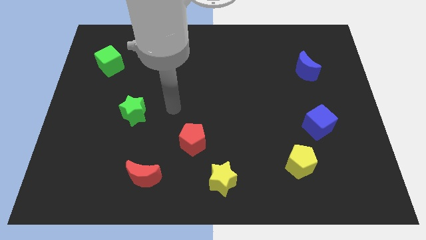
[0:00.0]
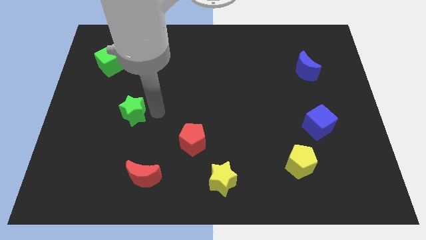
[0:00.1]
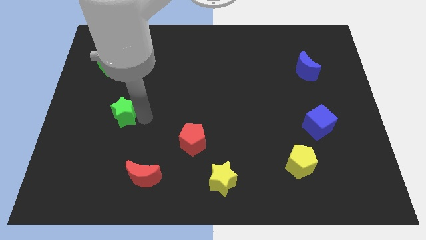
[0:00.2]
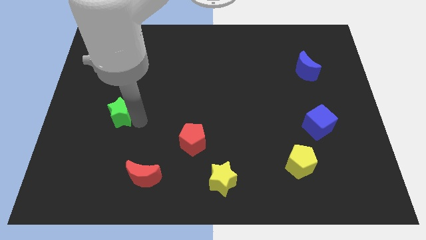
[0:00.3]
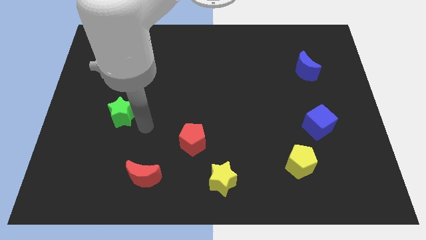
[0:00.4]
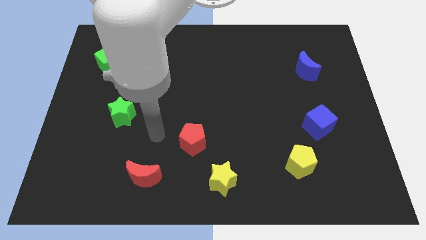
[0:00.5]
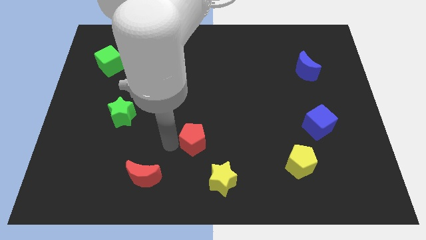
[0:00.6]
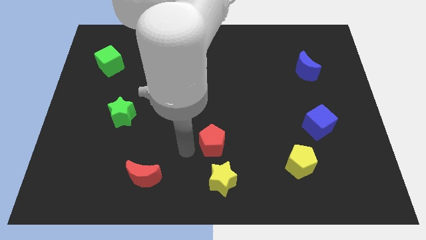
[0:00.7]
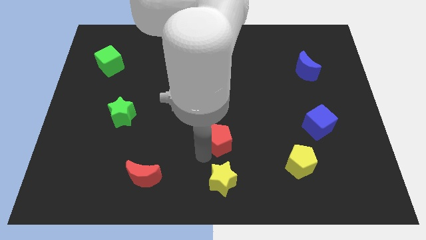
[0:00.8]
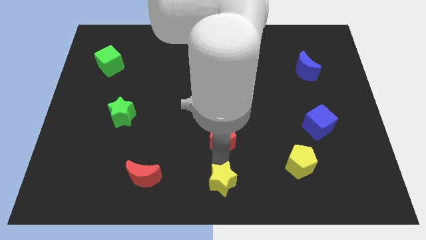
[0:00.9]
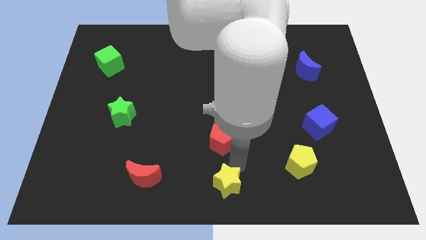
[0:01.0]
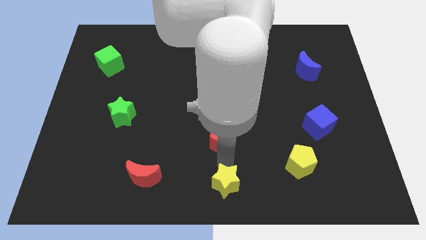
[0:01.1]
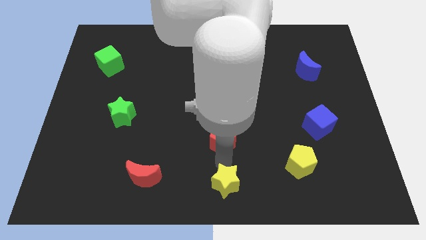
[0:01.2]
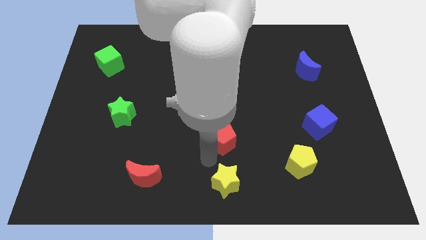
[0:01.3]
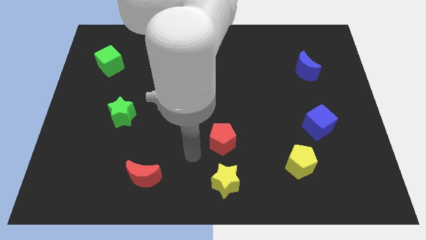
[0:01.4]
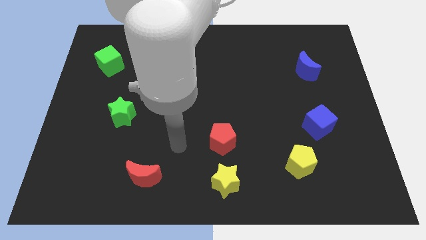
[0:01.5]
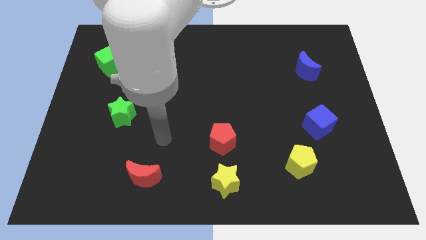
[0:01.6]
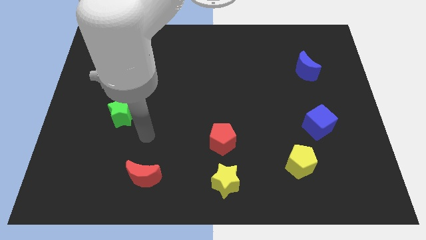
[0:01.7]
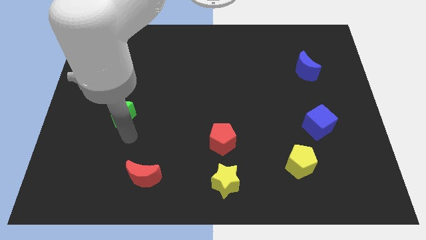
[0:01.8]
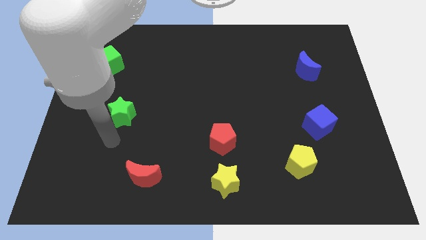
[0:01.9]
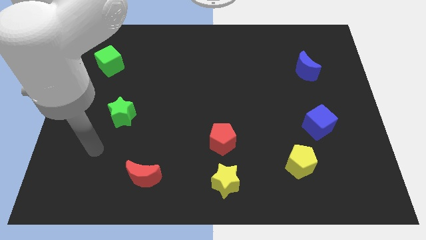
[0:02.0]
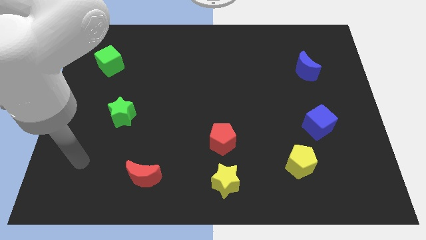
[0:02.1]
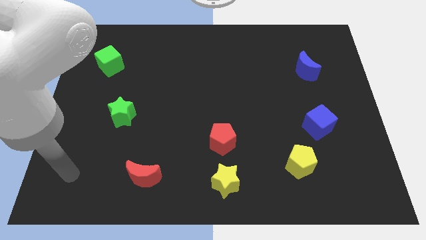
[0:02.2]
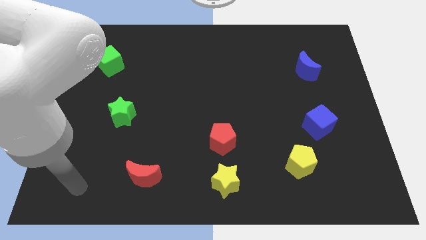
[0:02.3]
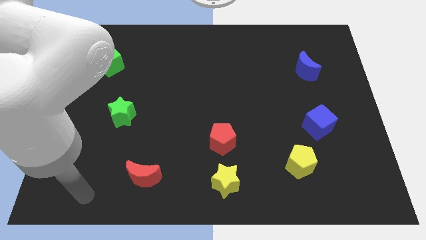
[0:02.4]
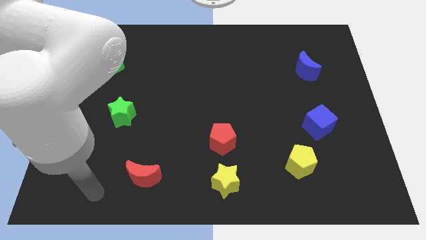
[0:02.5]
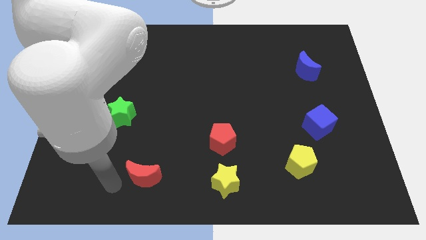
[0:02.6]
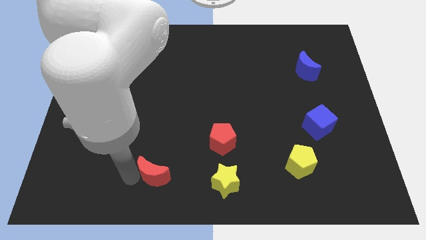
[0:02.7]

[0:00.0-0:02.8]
place your arm near the red moon

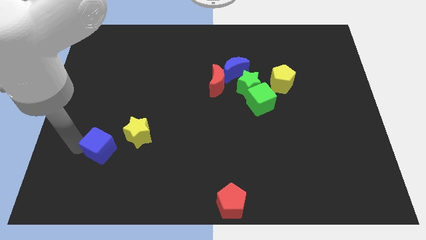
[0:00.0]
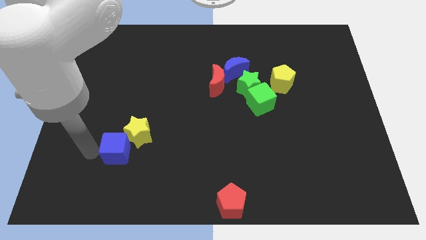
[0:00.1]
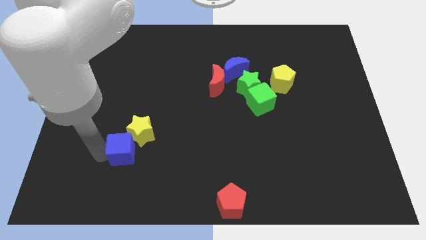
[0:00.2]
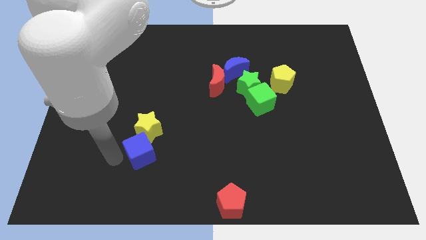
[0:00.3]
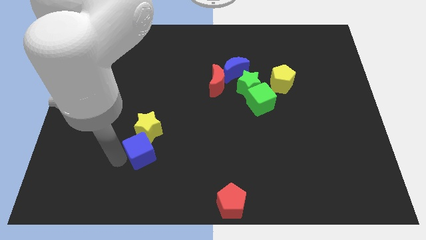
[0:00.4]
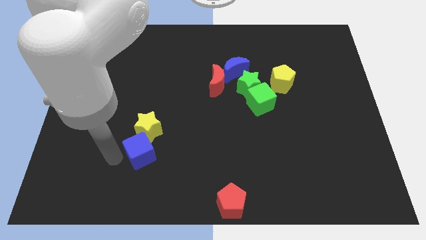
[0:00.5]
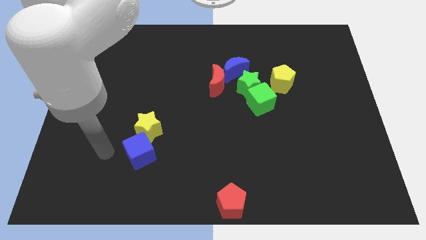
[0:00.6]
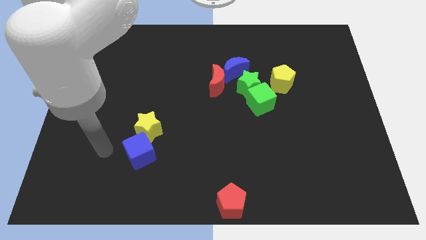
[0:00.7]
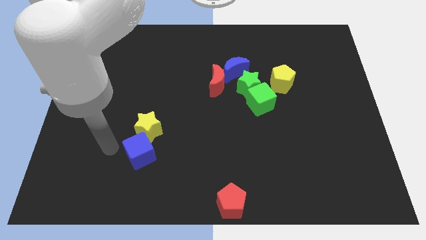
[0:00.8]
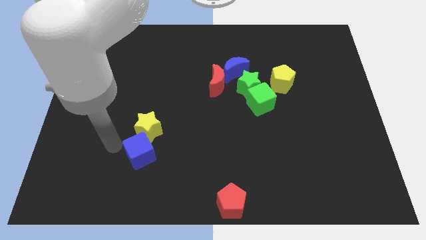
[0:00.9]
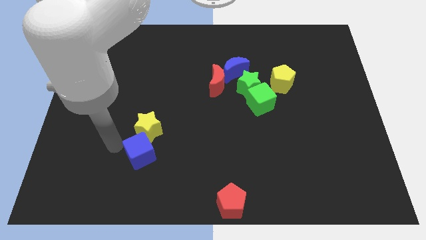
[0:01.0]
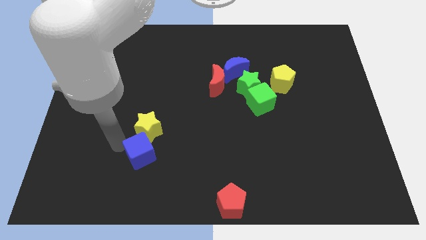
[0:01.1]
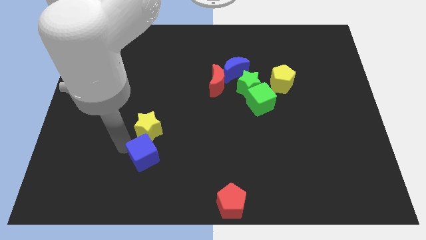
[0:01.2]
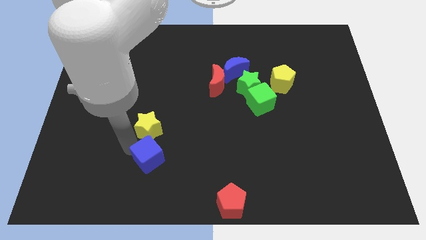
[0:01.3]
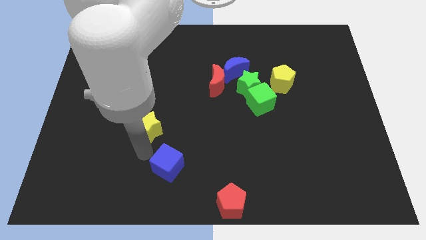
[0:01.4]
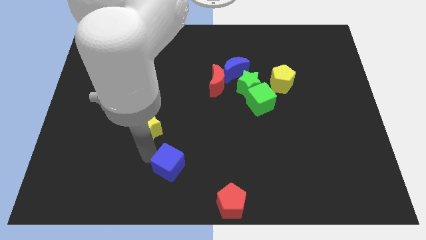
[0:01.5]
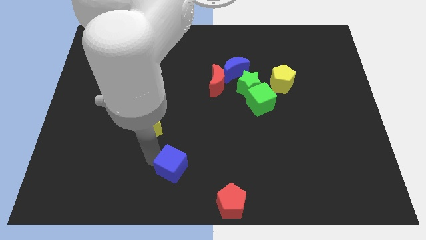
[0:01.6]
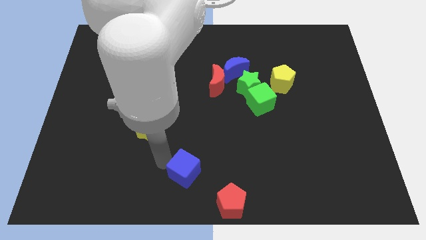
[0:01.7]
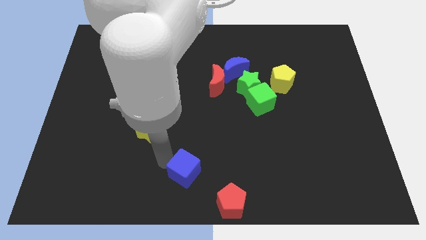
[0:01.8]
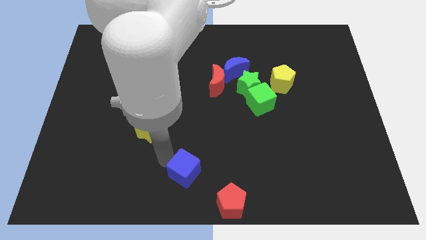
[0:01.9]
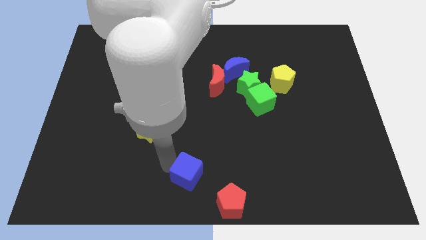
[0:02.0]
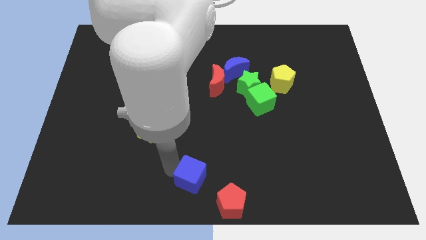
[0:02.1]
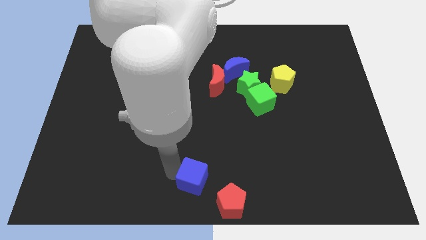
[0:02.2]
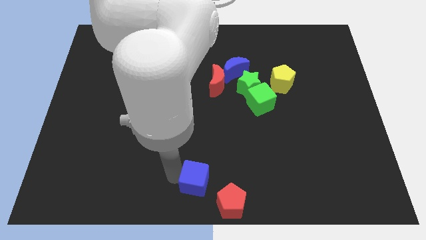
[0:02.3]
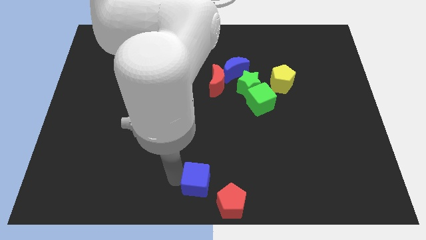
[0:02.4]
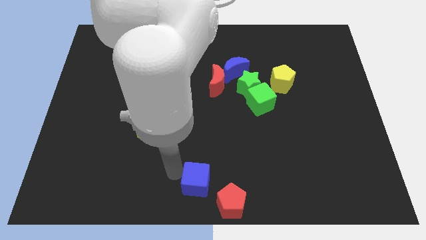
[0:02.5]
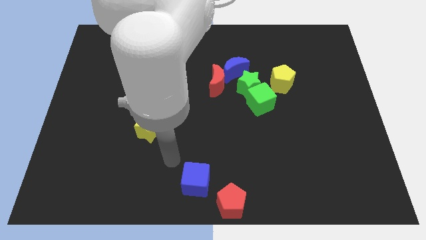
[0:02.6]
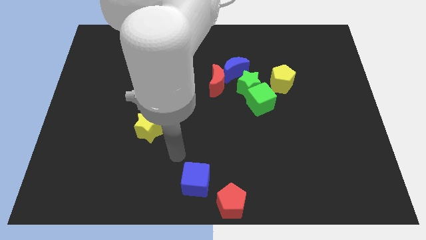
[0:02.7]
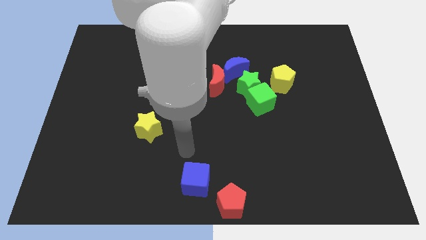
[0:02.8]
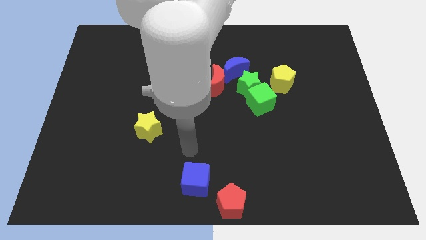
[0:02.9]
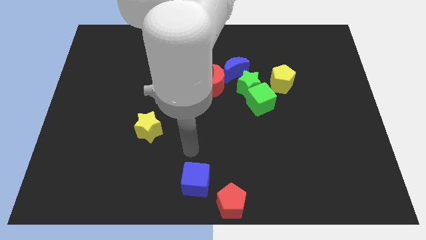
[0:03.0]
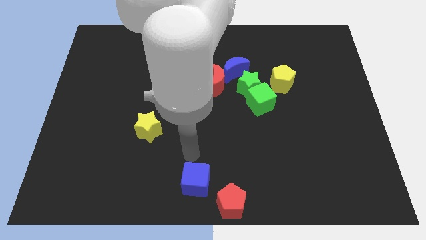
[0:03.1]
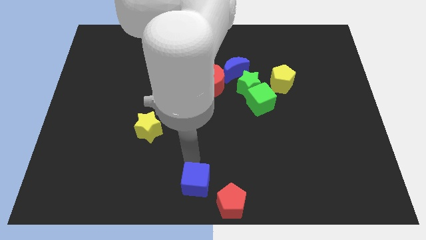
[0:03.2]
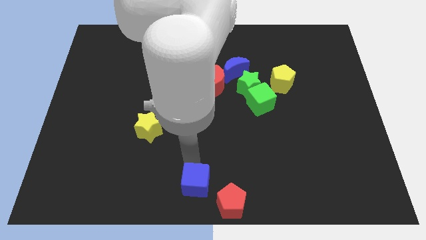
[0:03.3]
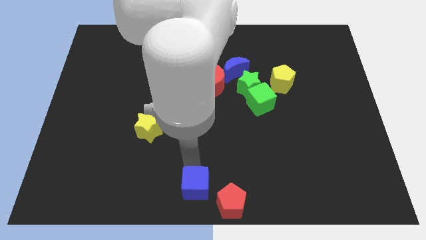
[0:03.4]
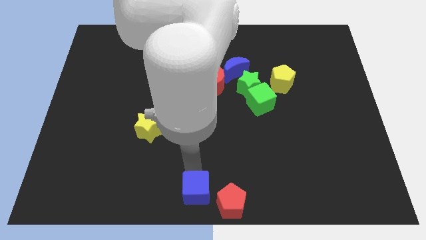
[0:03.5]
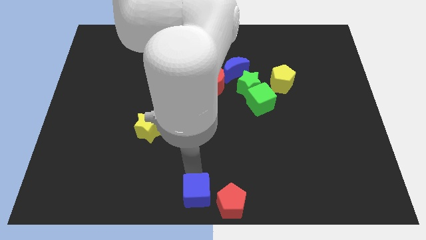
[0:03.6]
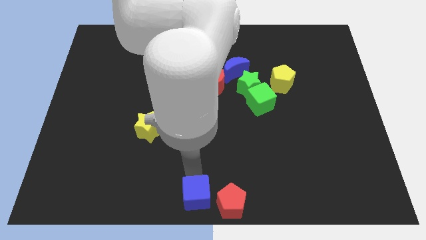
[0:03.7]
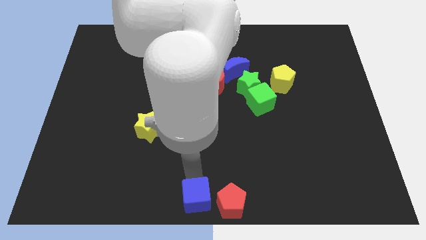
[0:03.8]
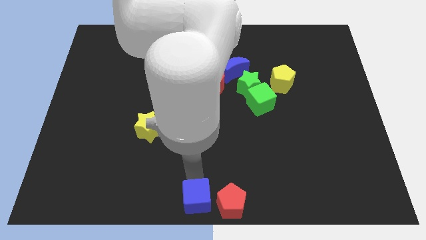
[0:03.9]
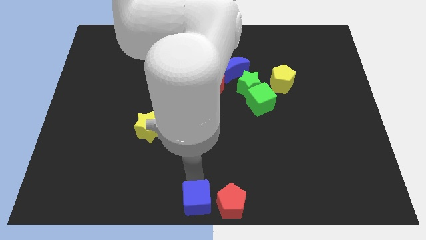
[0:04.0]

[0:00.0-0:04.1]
separate blue cube from yellow star

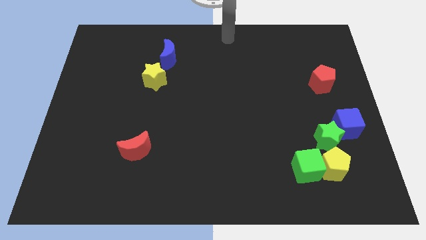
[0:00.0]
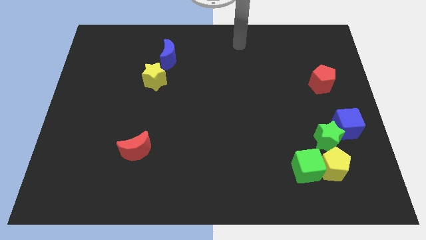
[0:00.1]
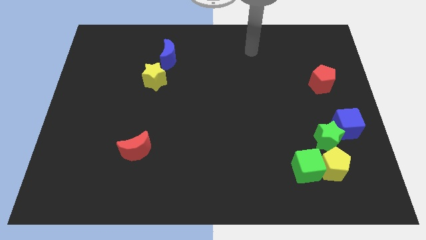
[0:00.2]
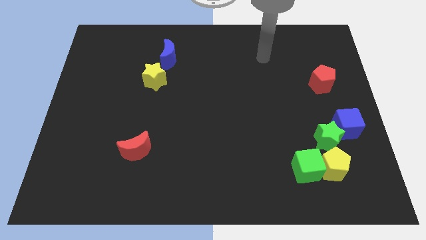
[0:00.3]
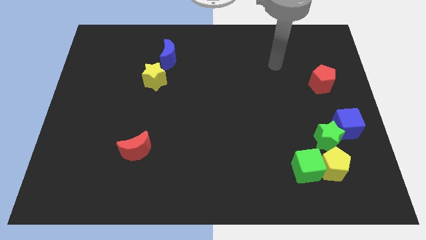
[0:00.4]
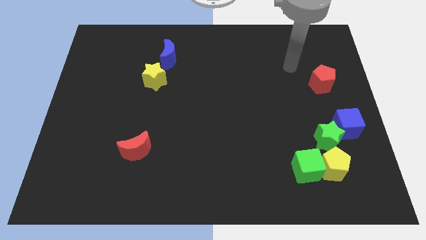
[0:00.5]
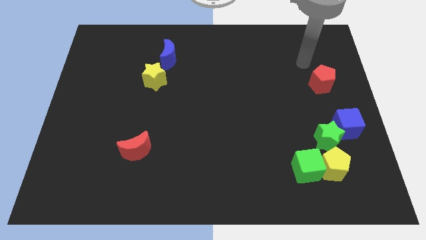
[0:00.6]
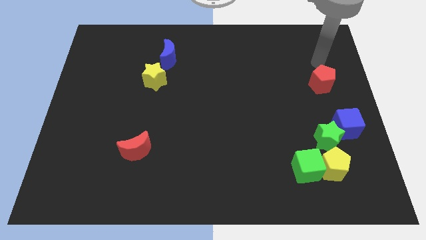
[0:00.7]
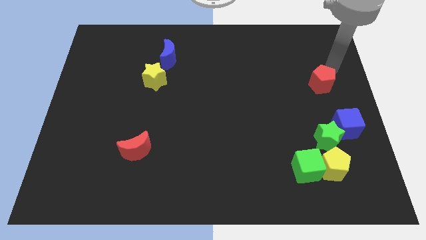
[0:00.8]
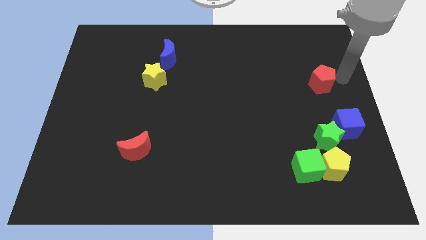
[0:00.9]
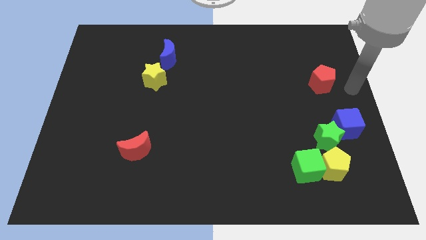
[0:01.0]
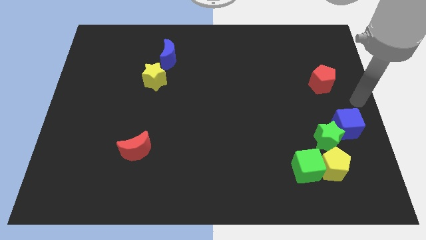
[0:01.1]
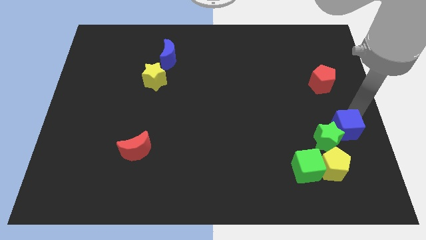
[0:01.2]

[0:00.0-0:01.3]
move your arm towards blue cube

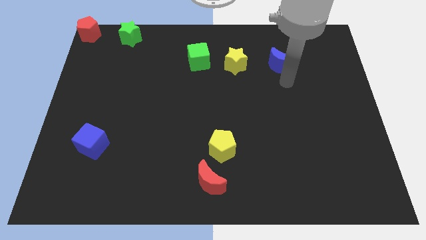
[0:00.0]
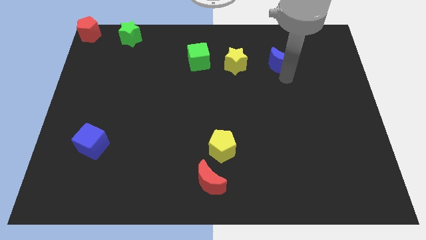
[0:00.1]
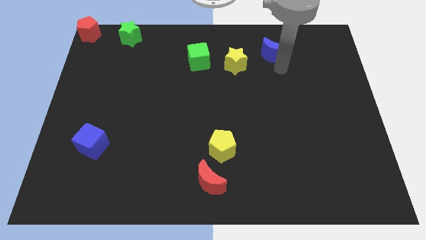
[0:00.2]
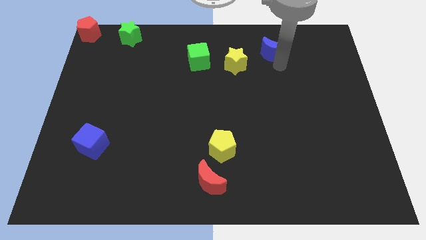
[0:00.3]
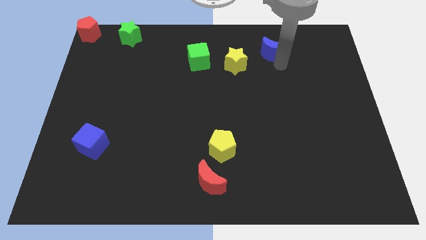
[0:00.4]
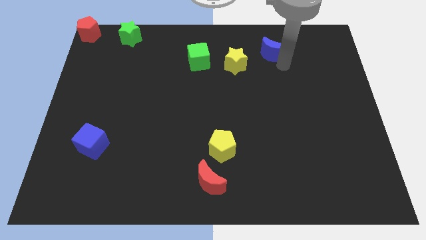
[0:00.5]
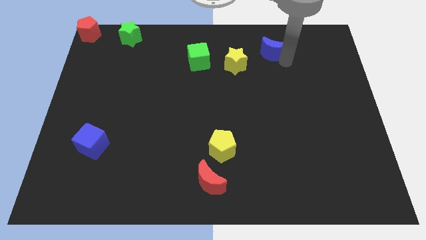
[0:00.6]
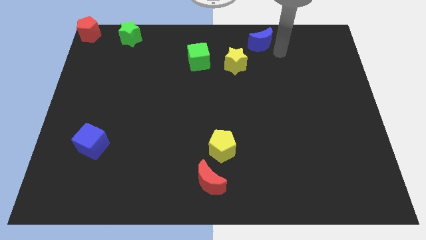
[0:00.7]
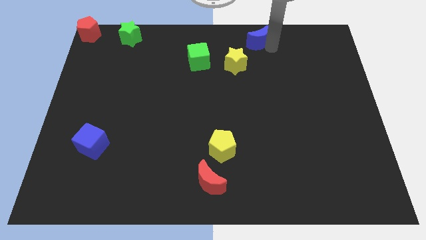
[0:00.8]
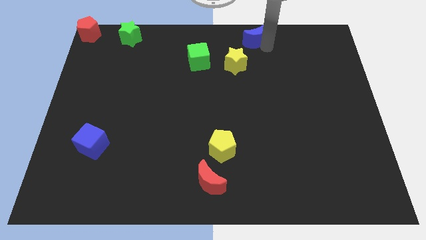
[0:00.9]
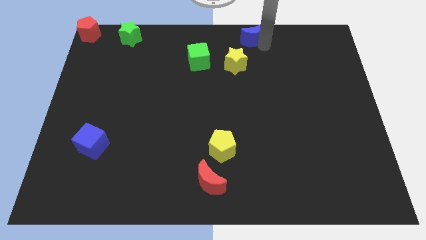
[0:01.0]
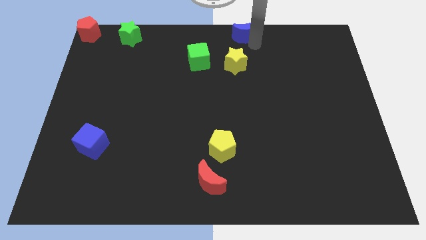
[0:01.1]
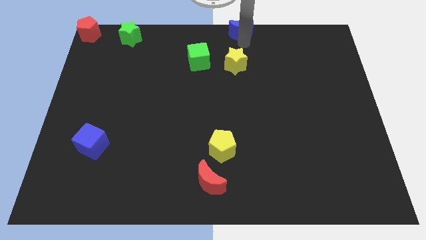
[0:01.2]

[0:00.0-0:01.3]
move the blue moon to the top side of the yellow star
